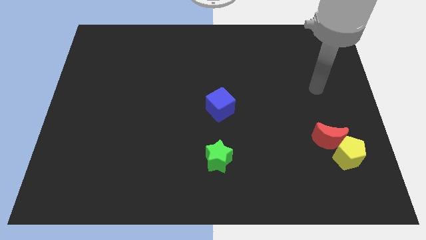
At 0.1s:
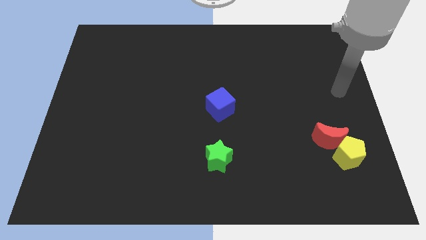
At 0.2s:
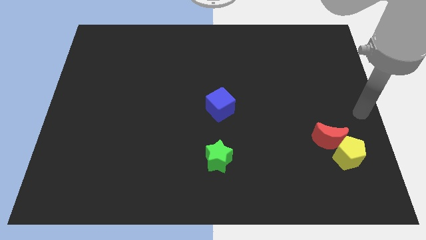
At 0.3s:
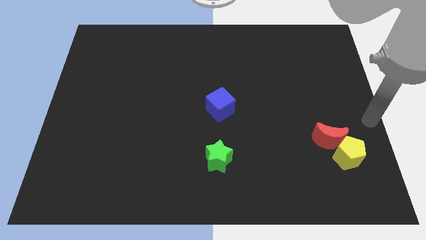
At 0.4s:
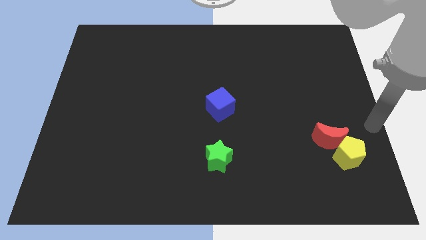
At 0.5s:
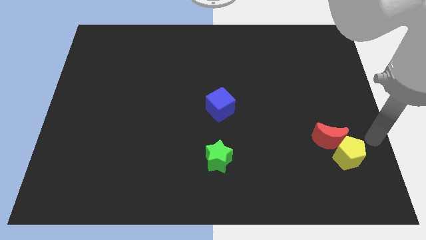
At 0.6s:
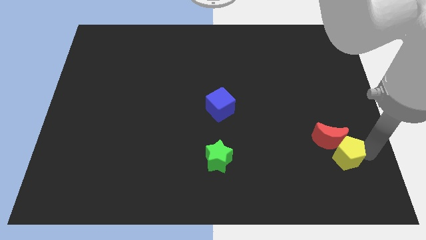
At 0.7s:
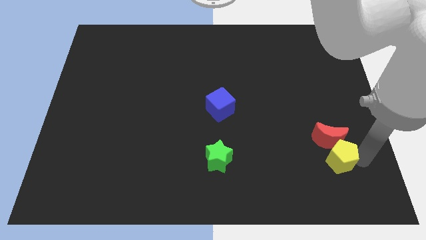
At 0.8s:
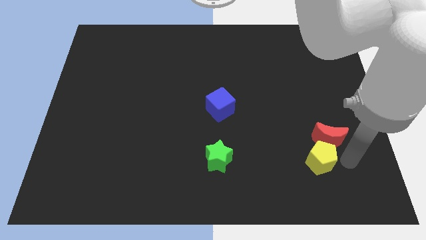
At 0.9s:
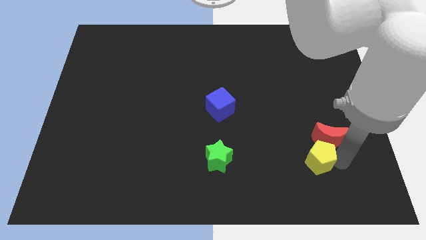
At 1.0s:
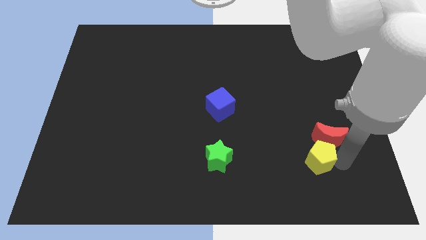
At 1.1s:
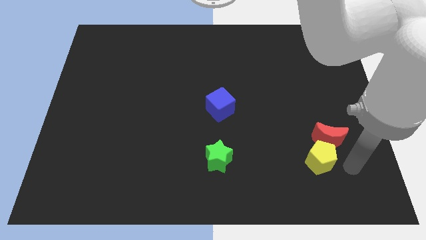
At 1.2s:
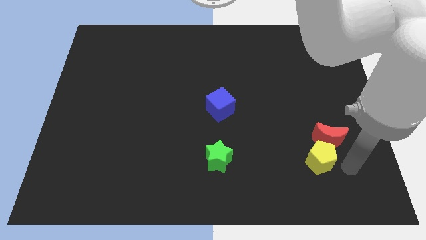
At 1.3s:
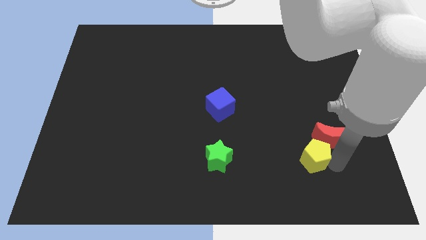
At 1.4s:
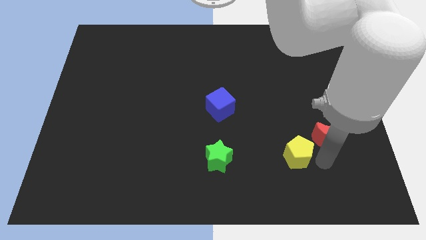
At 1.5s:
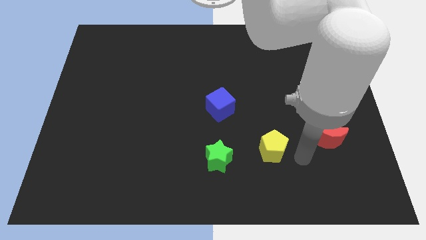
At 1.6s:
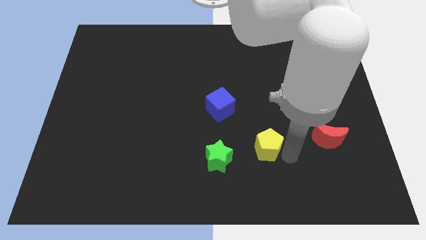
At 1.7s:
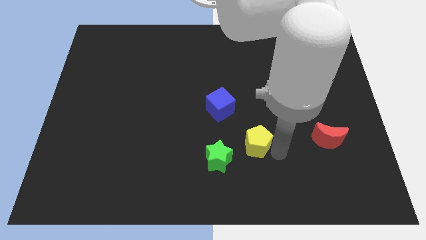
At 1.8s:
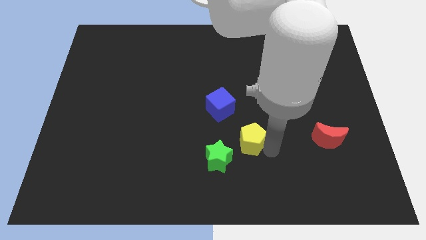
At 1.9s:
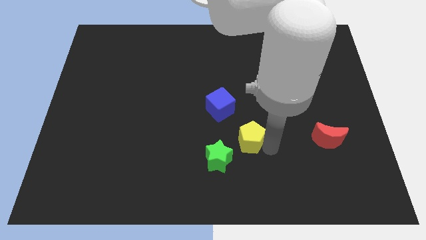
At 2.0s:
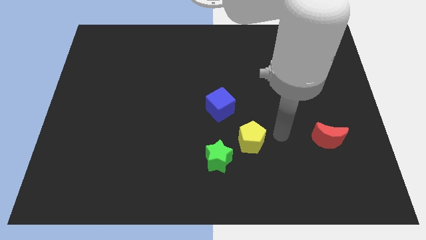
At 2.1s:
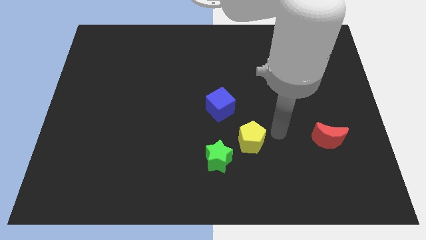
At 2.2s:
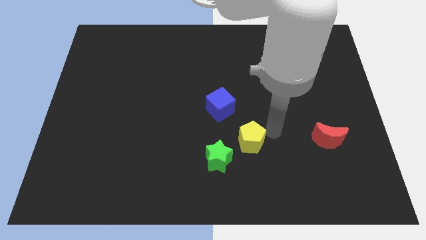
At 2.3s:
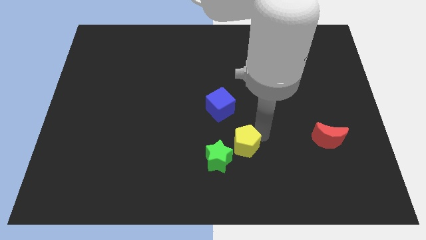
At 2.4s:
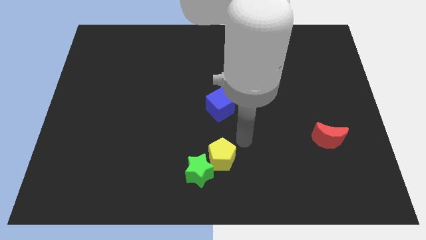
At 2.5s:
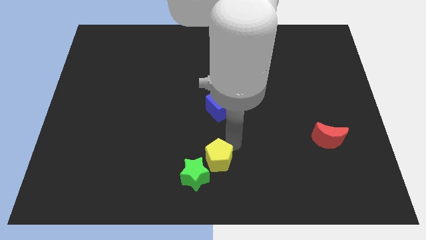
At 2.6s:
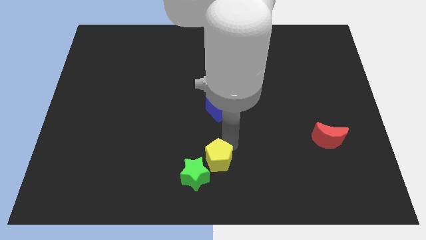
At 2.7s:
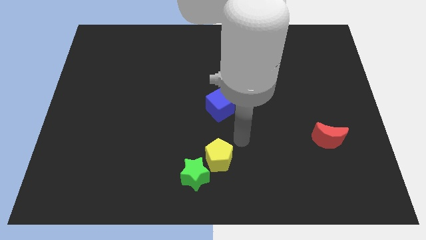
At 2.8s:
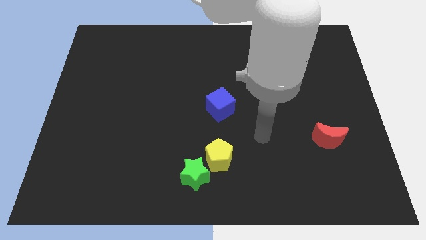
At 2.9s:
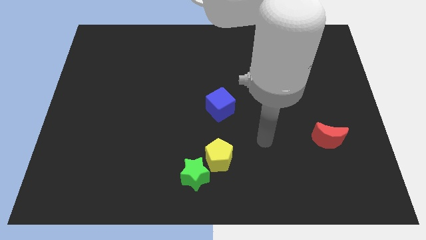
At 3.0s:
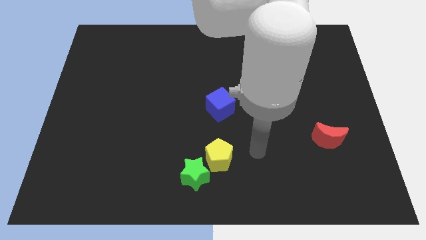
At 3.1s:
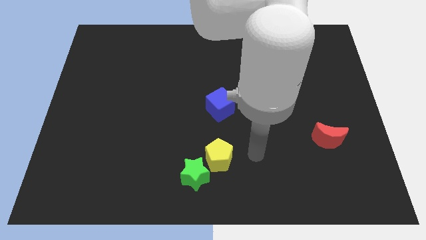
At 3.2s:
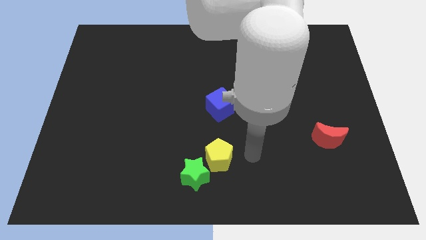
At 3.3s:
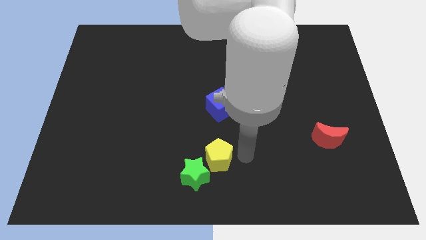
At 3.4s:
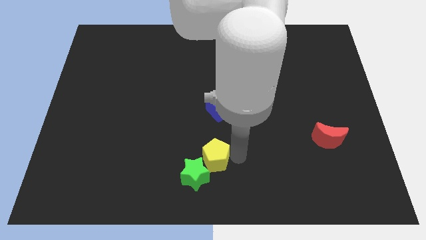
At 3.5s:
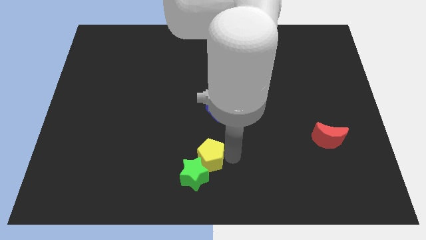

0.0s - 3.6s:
move the pentagon towards the green star

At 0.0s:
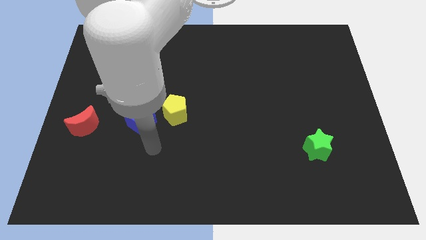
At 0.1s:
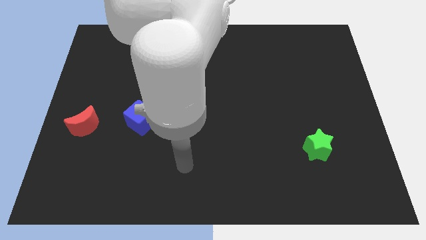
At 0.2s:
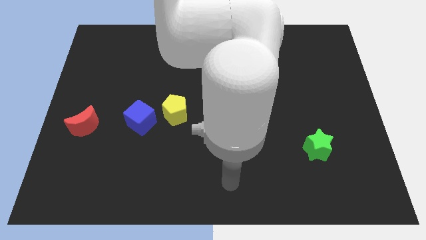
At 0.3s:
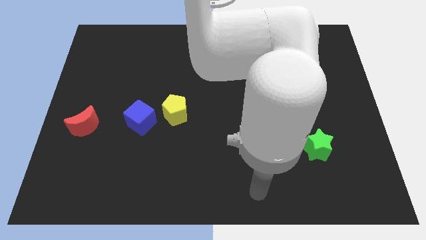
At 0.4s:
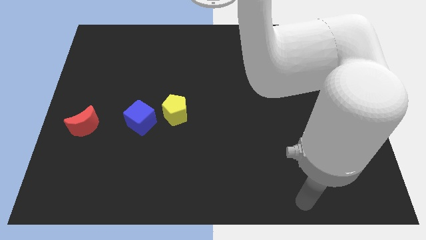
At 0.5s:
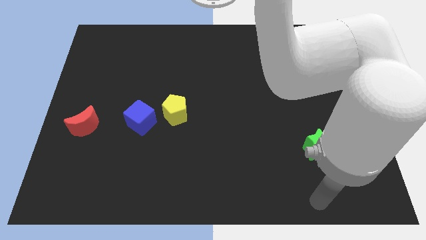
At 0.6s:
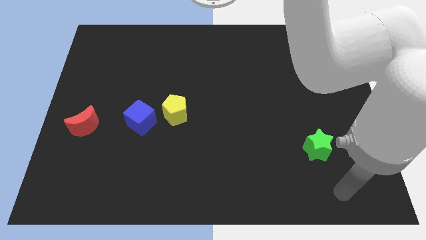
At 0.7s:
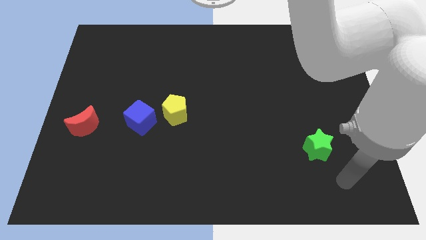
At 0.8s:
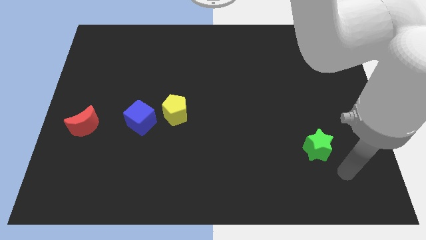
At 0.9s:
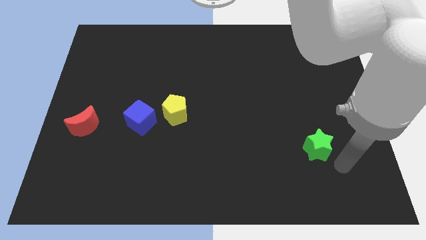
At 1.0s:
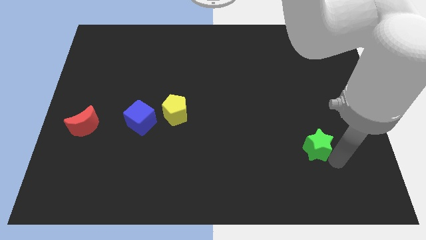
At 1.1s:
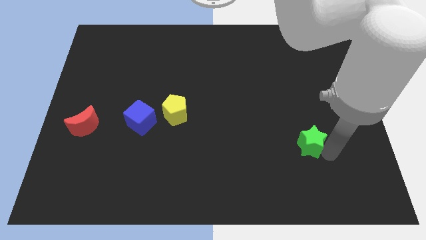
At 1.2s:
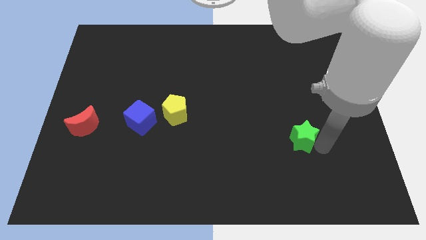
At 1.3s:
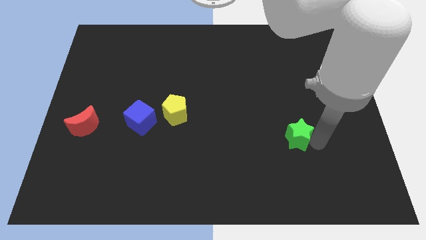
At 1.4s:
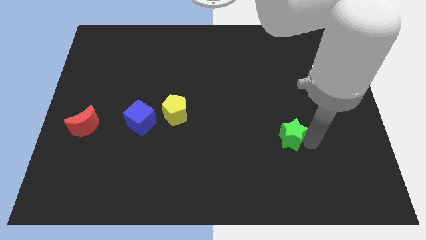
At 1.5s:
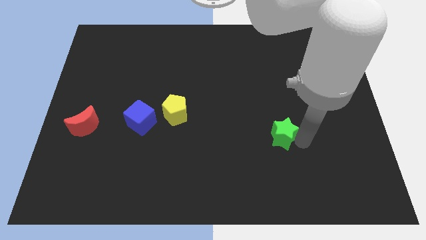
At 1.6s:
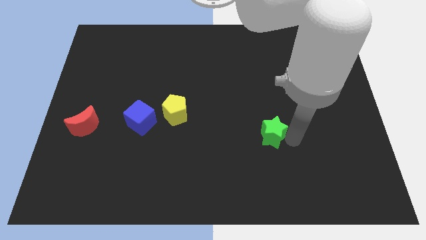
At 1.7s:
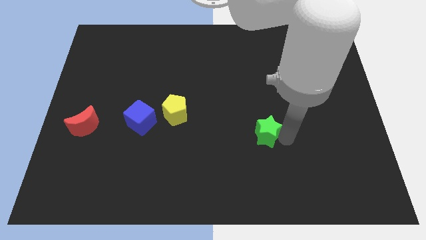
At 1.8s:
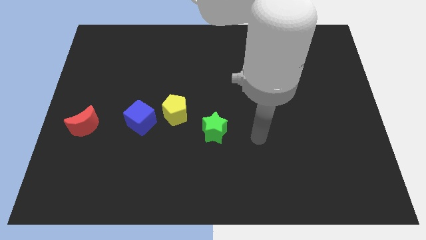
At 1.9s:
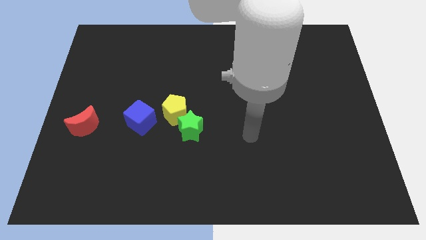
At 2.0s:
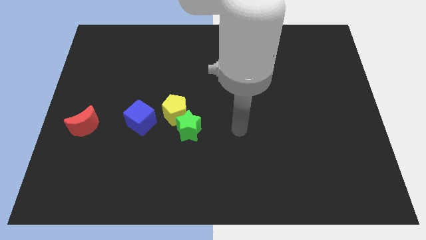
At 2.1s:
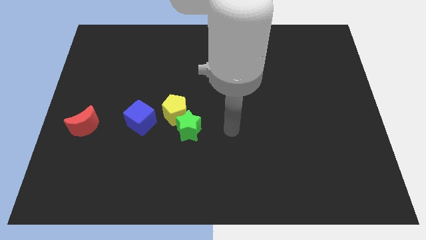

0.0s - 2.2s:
put the green block towards the yellow pentagon

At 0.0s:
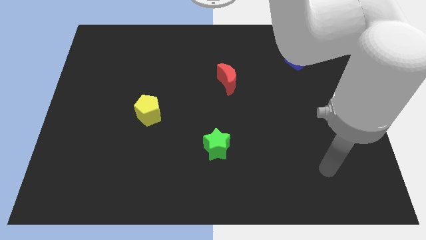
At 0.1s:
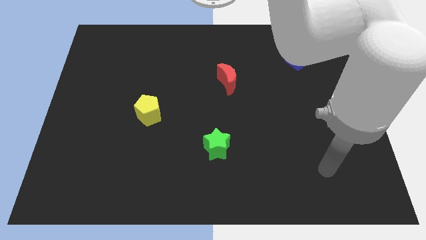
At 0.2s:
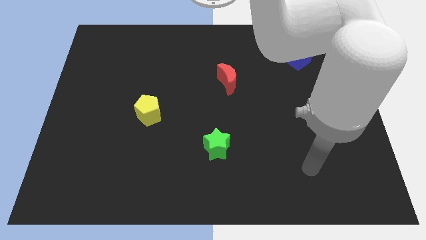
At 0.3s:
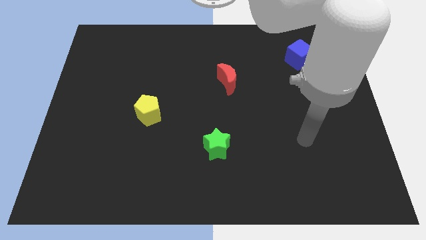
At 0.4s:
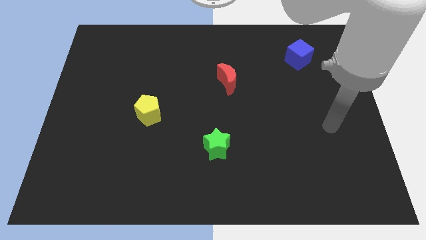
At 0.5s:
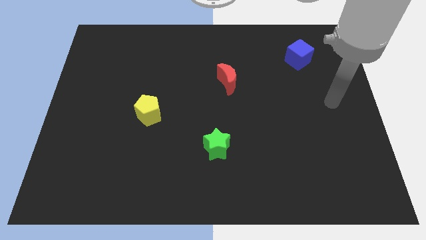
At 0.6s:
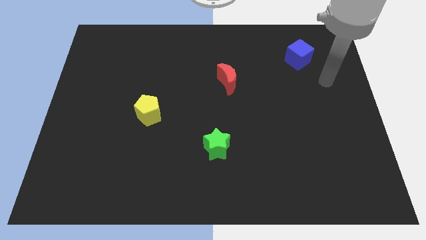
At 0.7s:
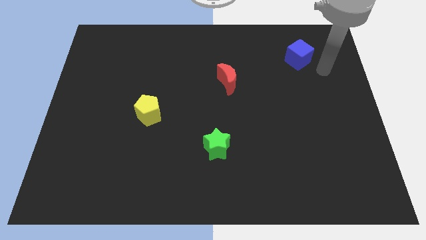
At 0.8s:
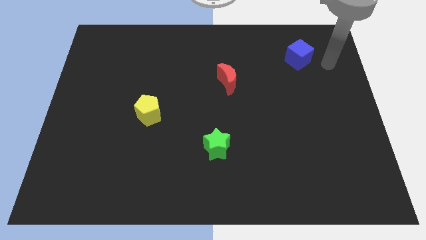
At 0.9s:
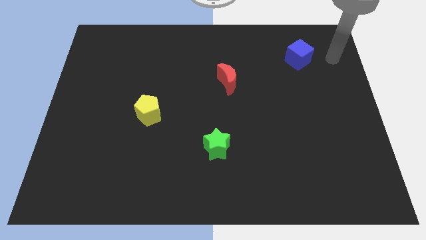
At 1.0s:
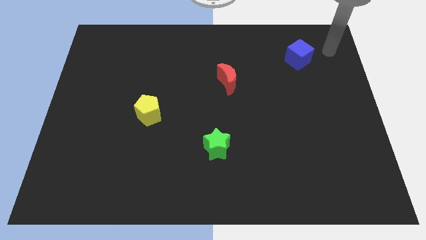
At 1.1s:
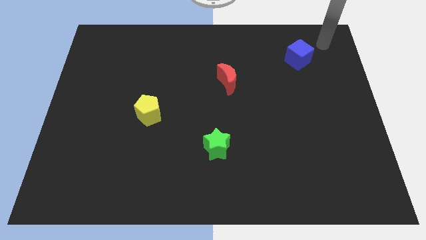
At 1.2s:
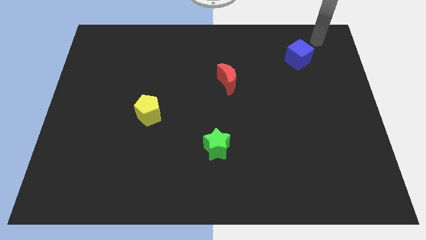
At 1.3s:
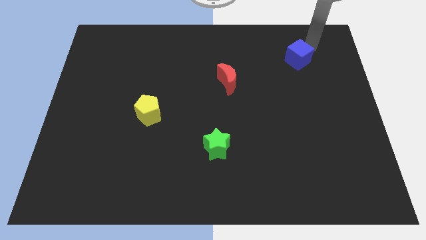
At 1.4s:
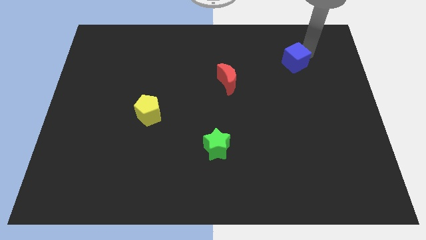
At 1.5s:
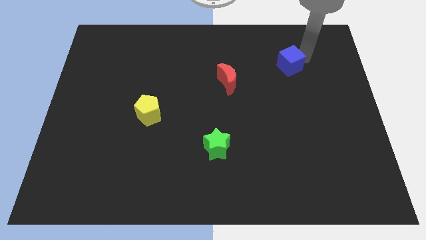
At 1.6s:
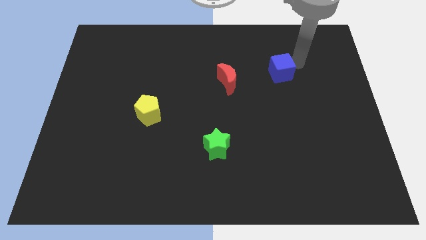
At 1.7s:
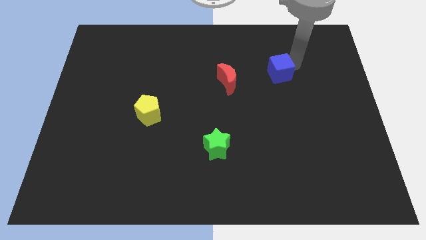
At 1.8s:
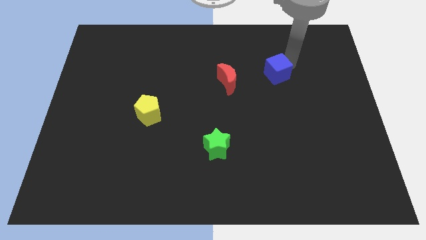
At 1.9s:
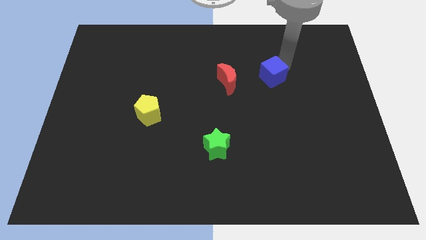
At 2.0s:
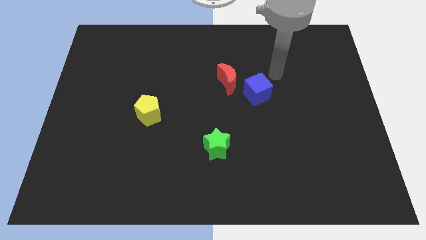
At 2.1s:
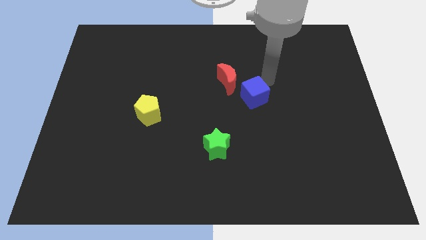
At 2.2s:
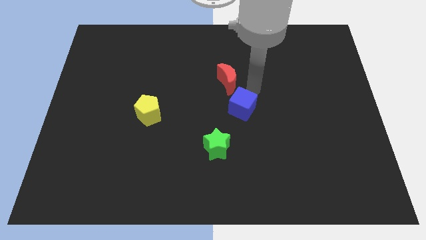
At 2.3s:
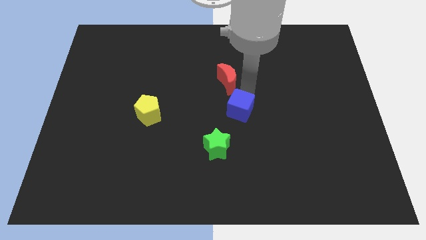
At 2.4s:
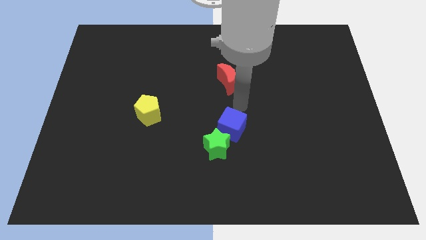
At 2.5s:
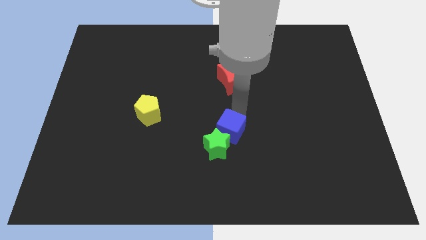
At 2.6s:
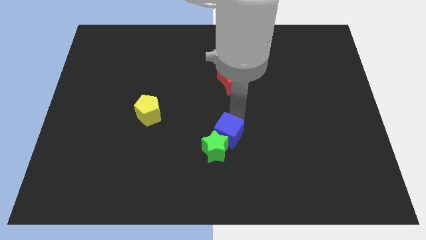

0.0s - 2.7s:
put the cube close to the star
